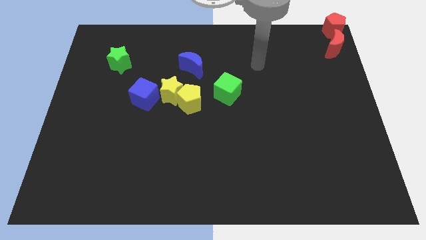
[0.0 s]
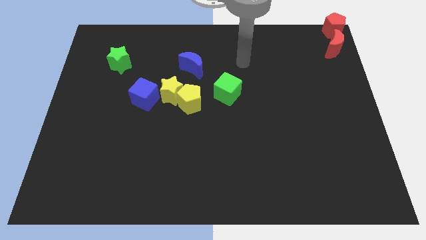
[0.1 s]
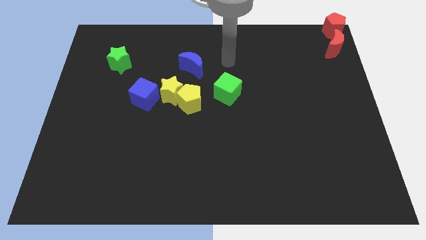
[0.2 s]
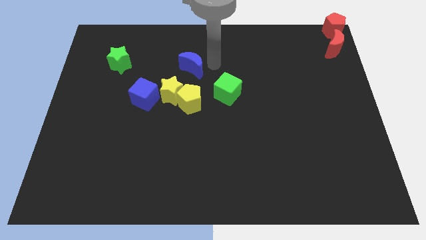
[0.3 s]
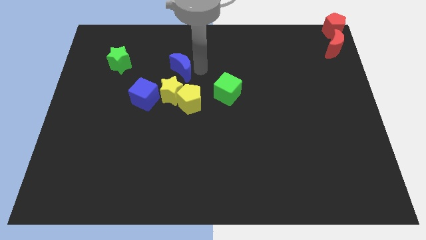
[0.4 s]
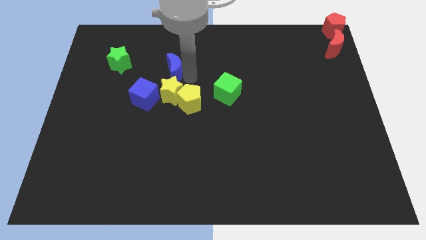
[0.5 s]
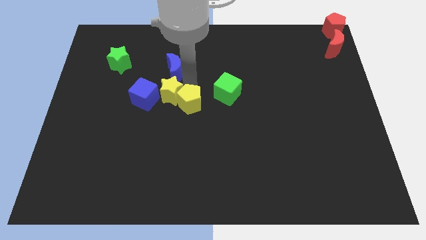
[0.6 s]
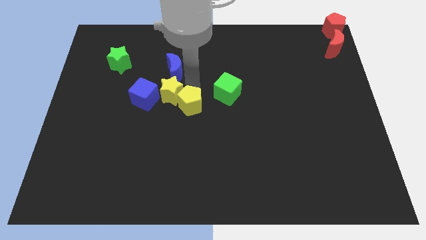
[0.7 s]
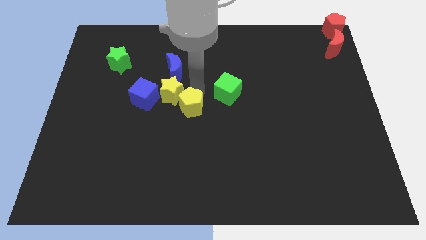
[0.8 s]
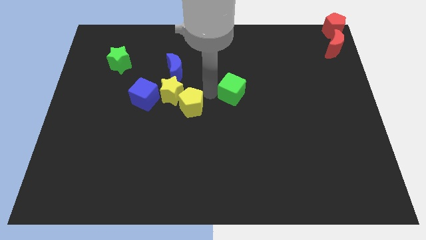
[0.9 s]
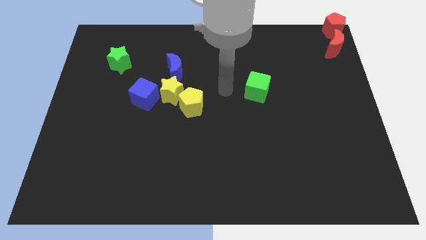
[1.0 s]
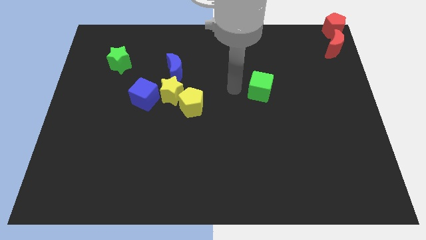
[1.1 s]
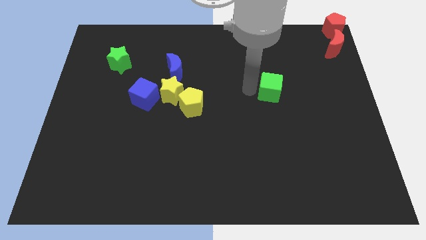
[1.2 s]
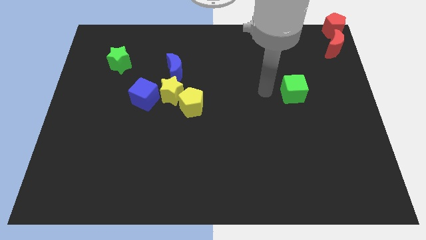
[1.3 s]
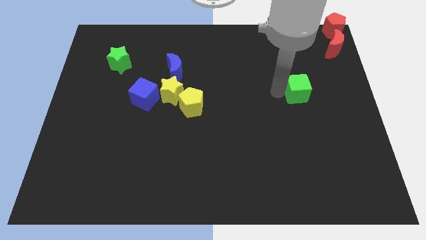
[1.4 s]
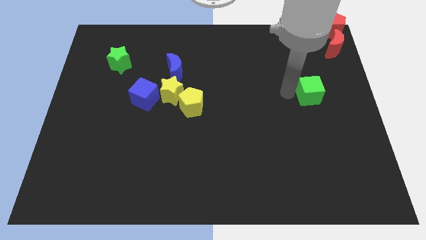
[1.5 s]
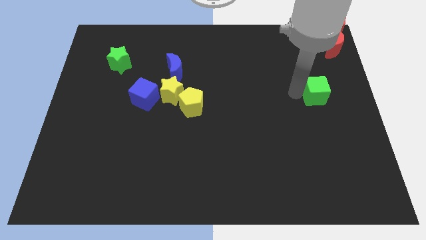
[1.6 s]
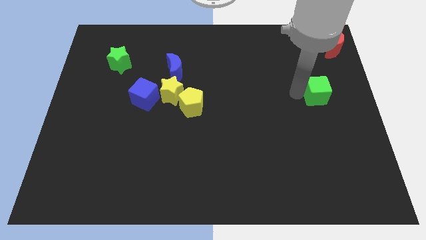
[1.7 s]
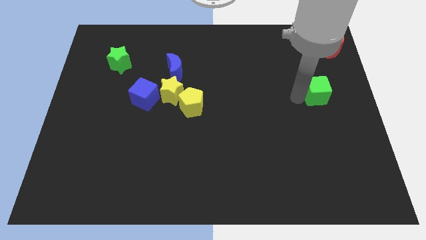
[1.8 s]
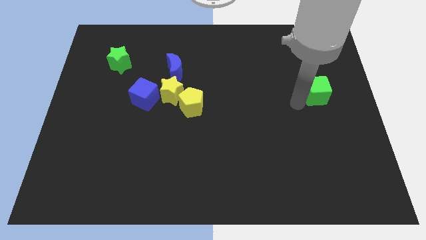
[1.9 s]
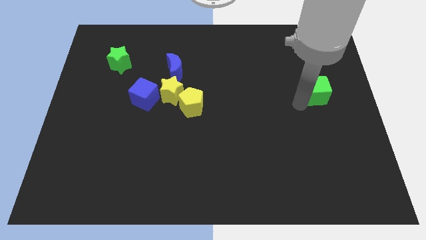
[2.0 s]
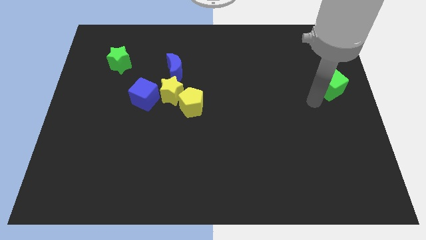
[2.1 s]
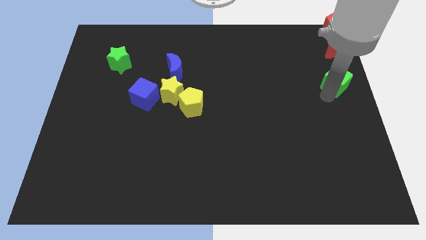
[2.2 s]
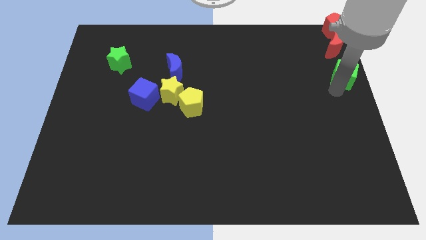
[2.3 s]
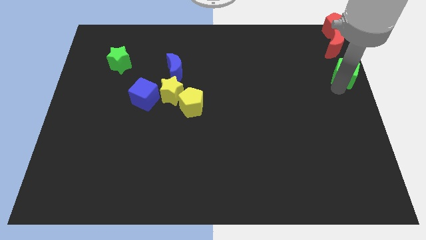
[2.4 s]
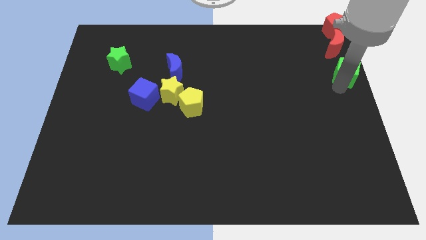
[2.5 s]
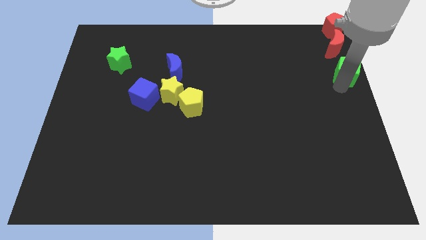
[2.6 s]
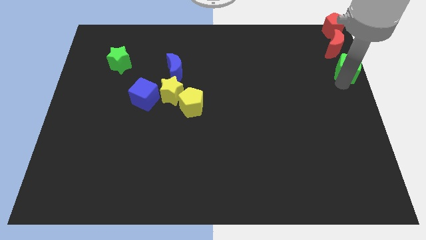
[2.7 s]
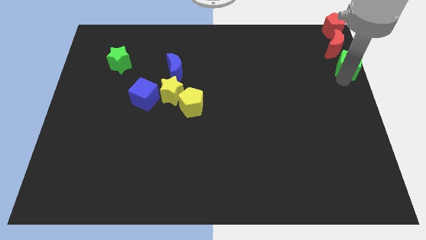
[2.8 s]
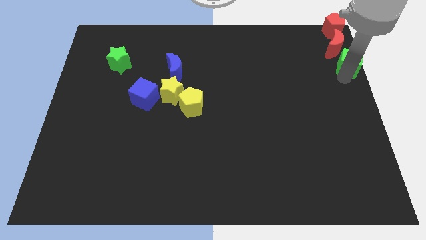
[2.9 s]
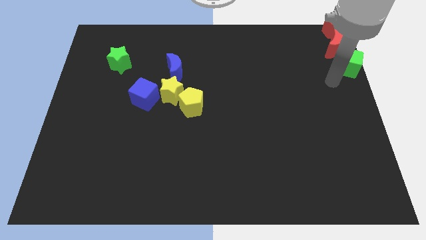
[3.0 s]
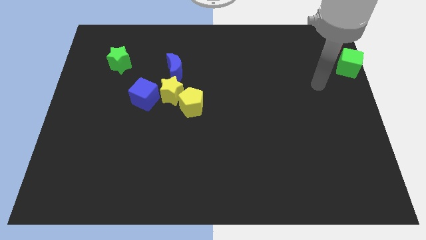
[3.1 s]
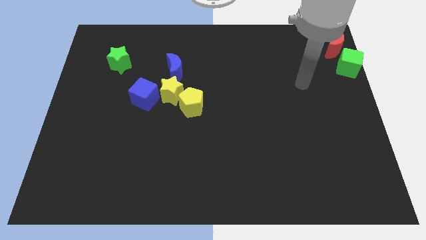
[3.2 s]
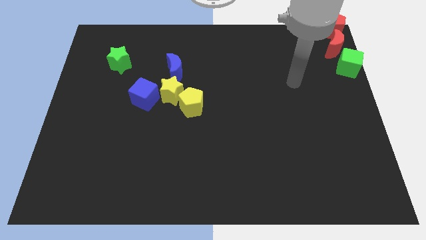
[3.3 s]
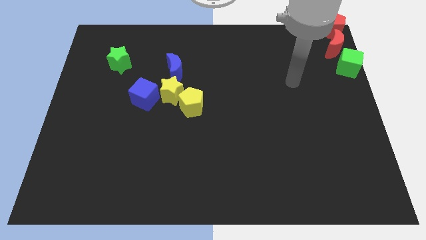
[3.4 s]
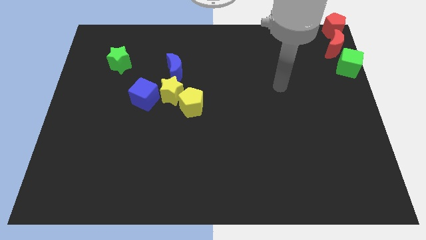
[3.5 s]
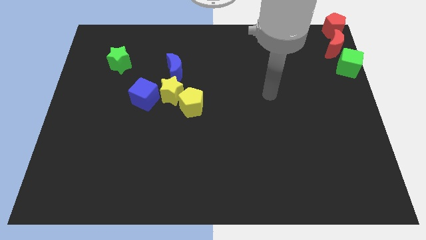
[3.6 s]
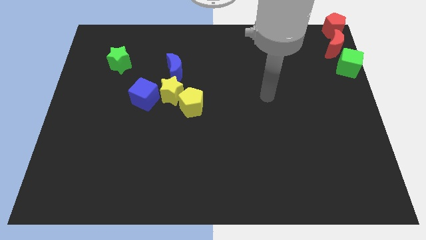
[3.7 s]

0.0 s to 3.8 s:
move the green cube below the red crescent

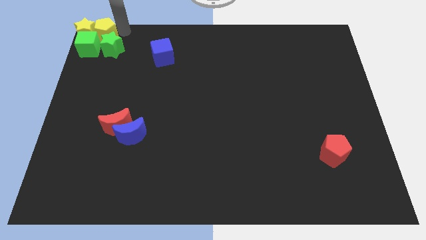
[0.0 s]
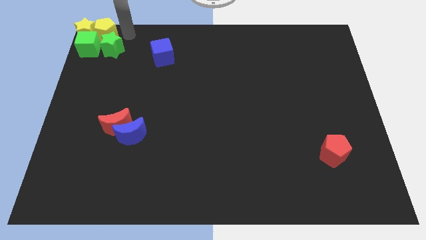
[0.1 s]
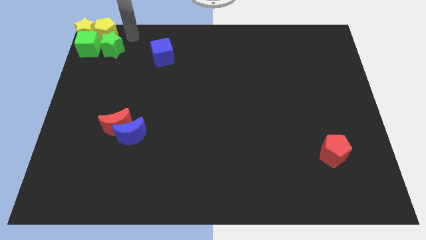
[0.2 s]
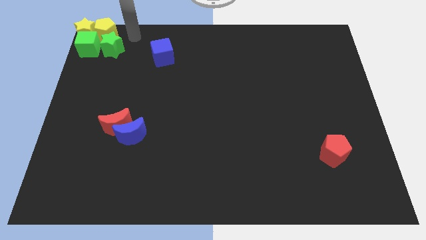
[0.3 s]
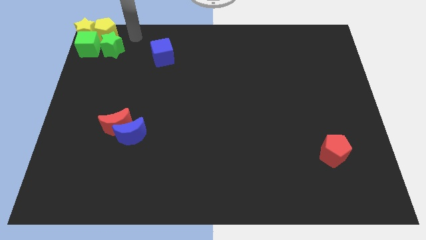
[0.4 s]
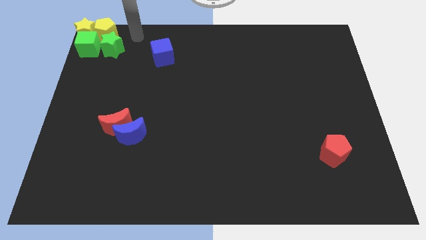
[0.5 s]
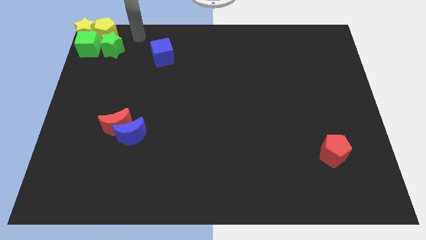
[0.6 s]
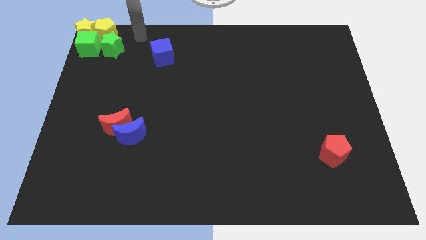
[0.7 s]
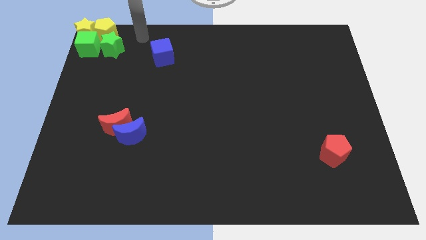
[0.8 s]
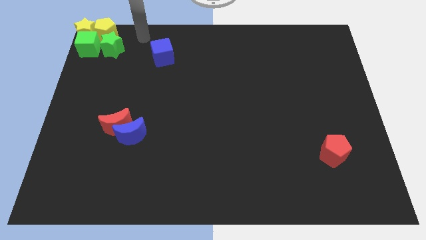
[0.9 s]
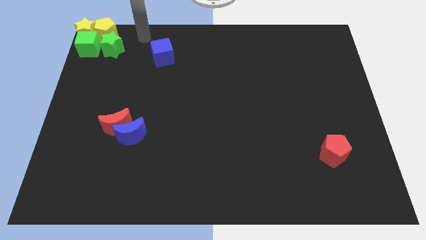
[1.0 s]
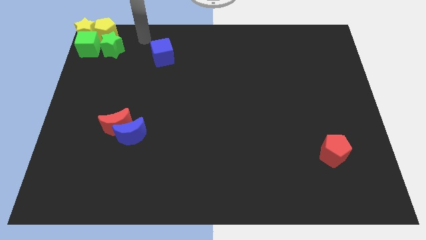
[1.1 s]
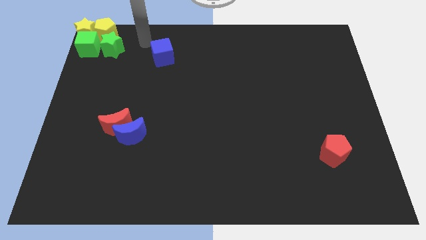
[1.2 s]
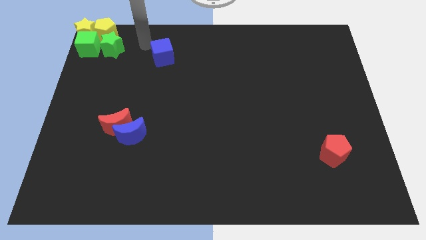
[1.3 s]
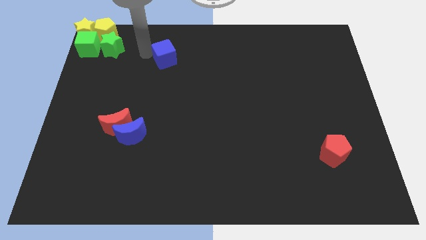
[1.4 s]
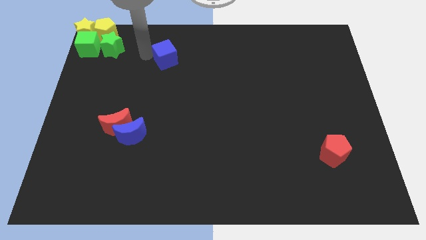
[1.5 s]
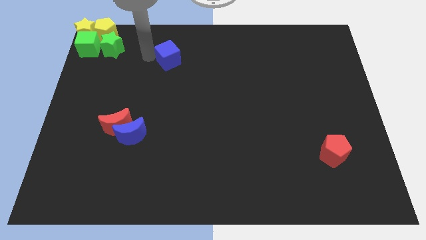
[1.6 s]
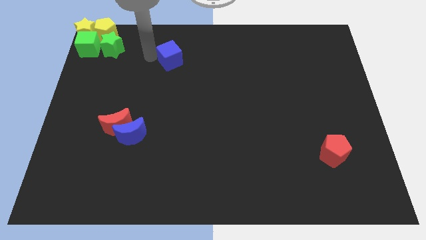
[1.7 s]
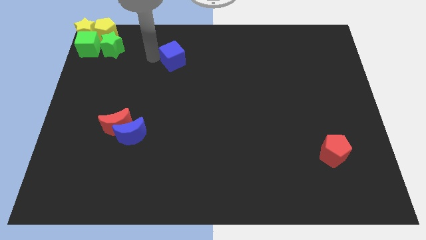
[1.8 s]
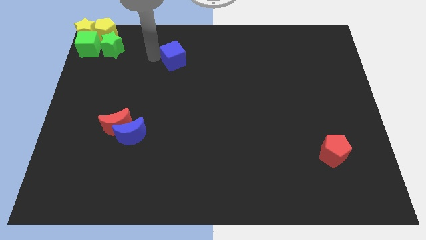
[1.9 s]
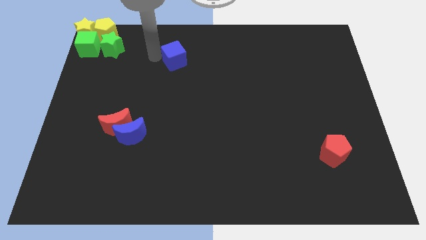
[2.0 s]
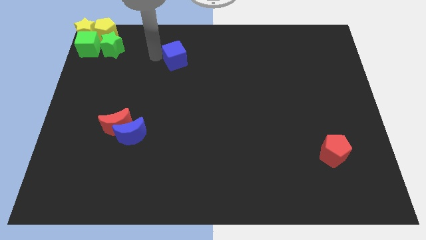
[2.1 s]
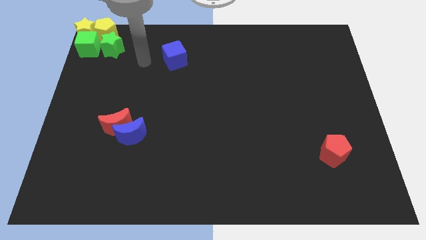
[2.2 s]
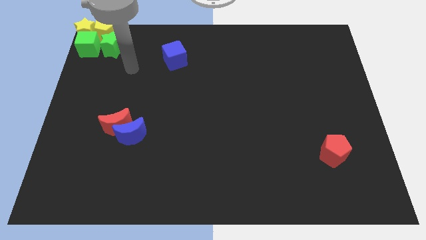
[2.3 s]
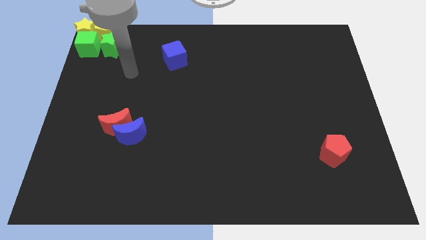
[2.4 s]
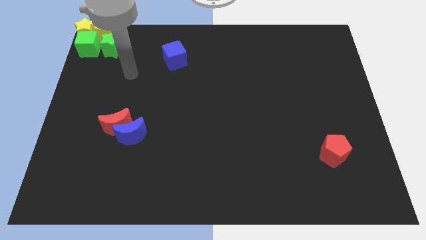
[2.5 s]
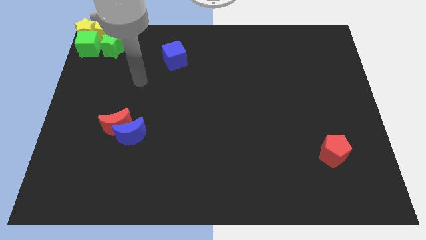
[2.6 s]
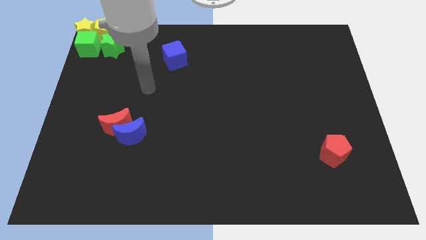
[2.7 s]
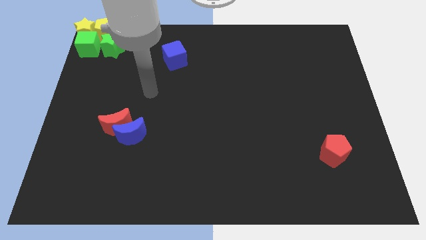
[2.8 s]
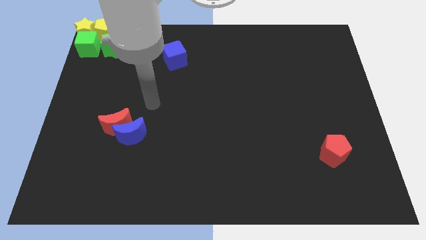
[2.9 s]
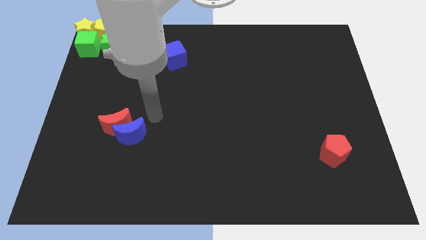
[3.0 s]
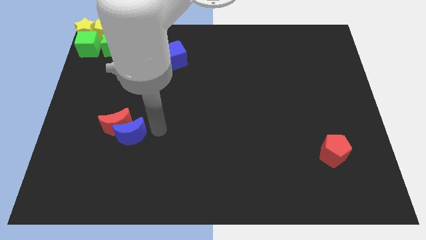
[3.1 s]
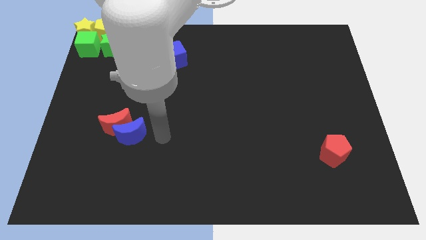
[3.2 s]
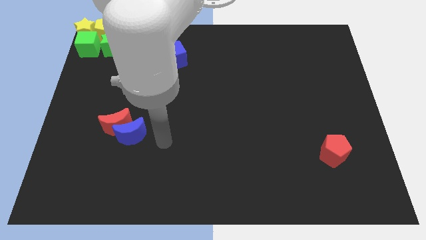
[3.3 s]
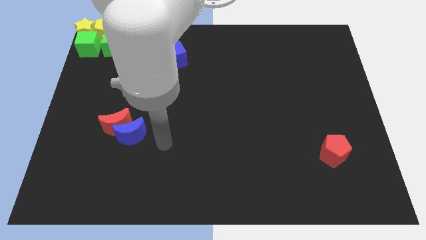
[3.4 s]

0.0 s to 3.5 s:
slightly move the blue cube to the center

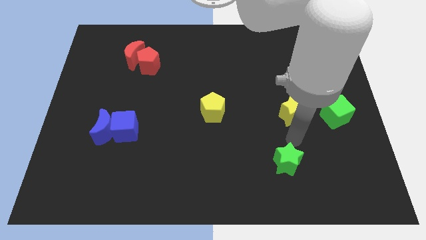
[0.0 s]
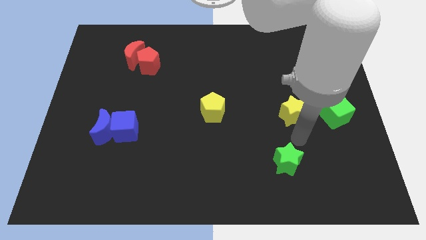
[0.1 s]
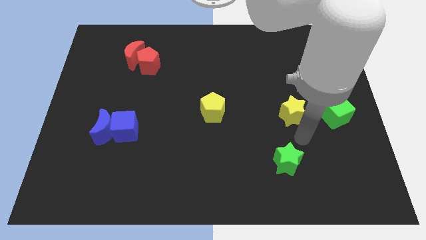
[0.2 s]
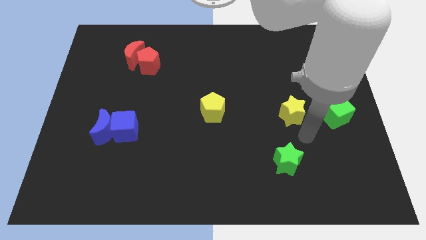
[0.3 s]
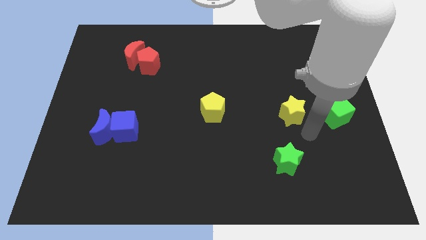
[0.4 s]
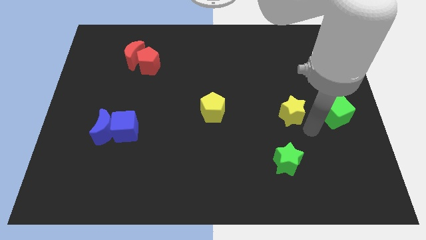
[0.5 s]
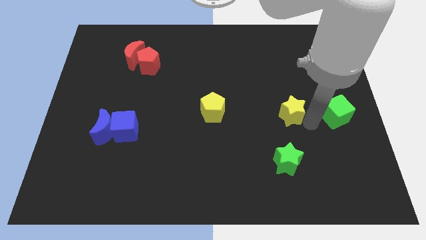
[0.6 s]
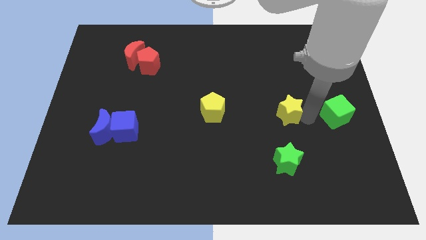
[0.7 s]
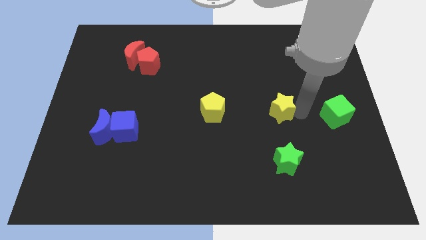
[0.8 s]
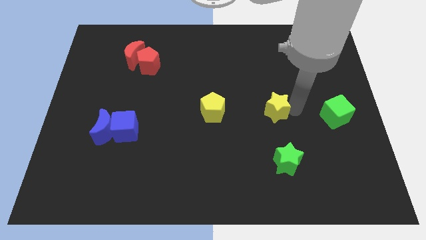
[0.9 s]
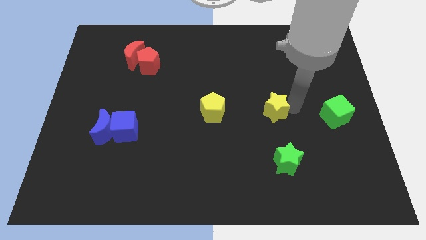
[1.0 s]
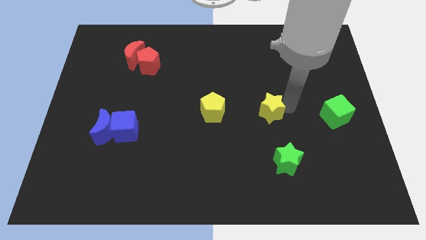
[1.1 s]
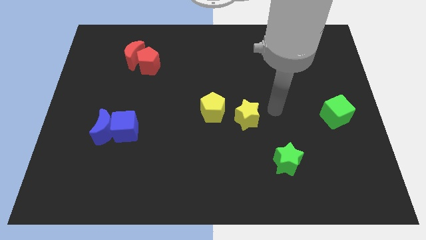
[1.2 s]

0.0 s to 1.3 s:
move the yellow star towards the yellow pentagon

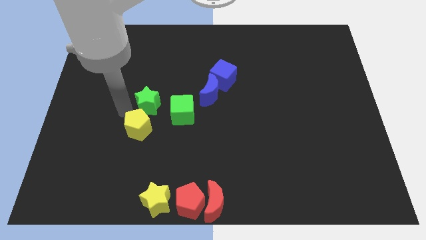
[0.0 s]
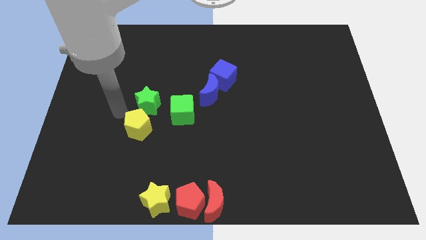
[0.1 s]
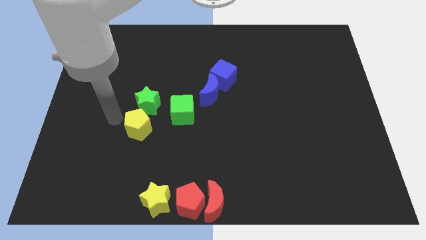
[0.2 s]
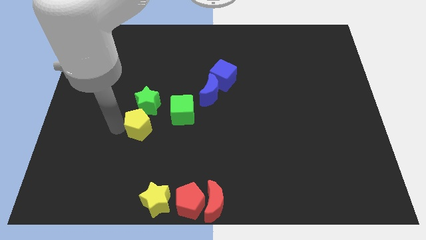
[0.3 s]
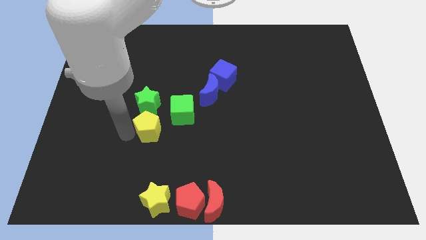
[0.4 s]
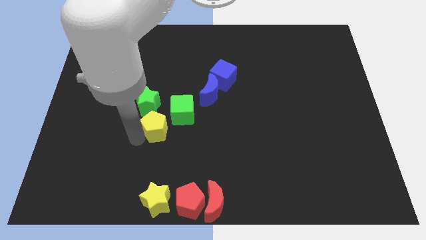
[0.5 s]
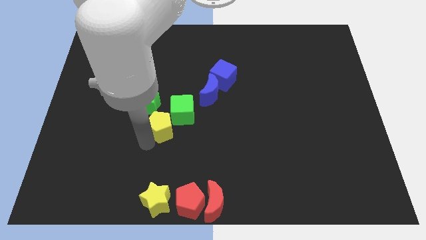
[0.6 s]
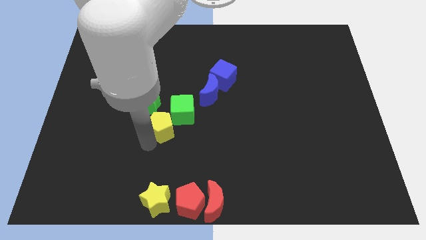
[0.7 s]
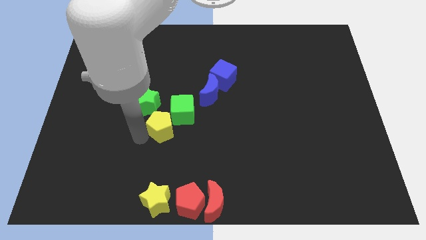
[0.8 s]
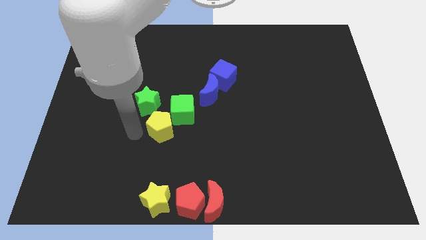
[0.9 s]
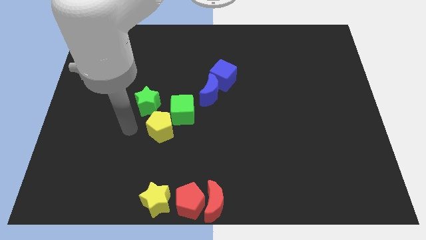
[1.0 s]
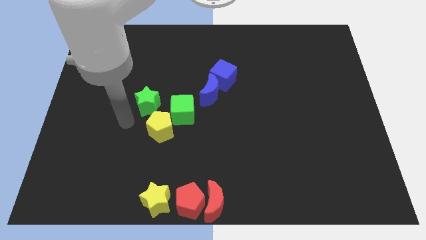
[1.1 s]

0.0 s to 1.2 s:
make the yellow pentagon to touch the green cube
